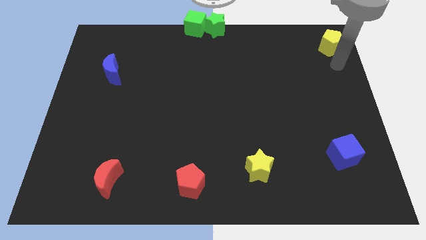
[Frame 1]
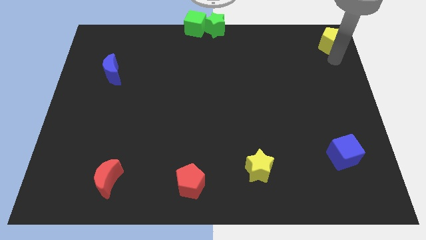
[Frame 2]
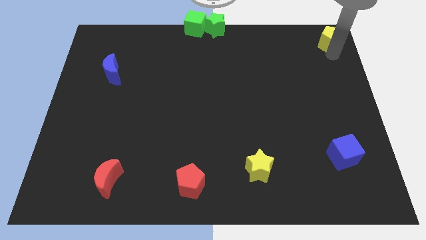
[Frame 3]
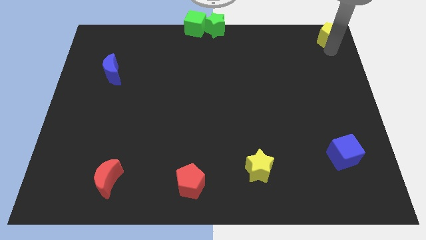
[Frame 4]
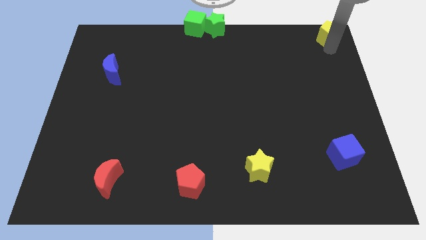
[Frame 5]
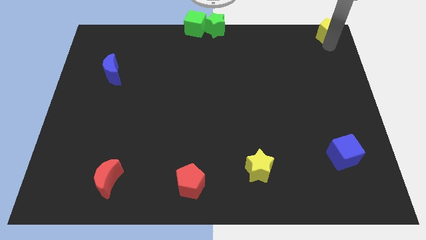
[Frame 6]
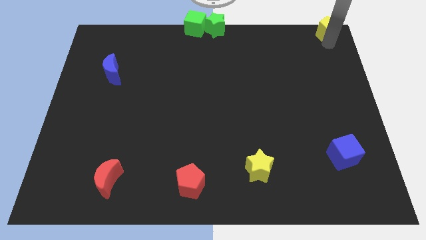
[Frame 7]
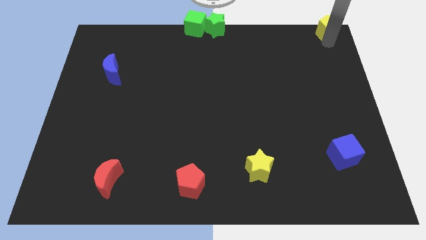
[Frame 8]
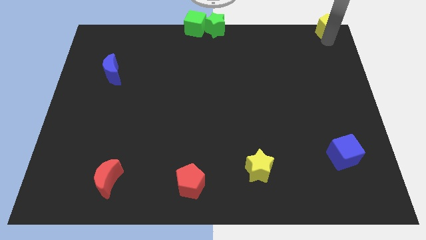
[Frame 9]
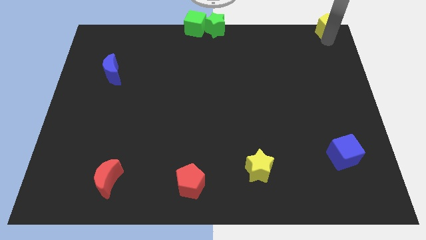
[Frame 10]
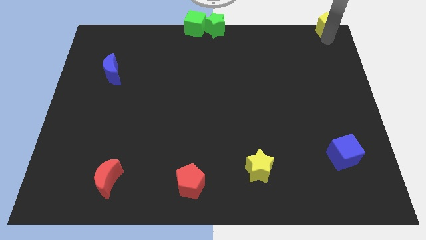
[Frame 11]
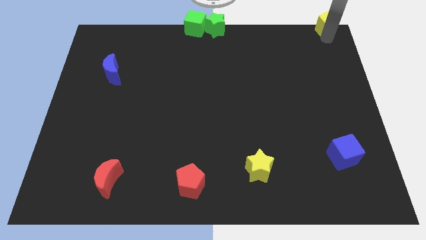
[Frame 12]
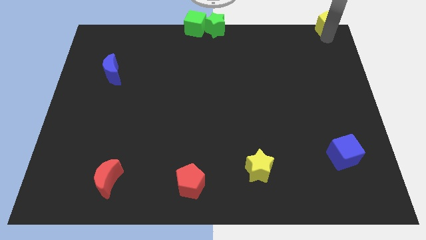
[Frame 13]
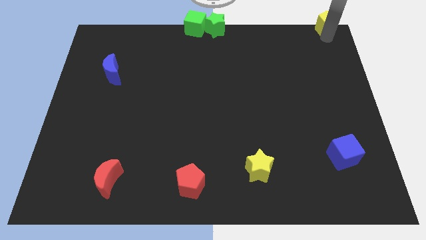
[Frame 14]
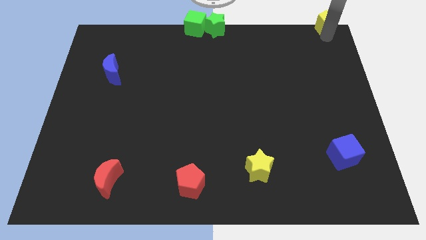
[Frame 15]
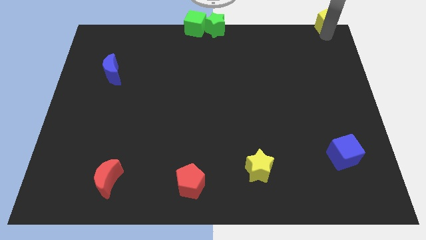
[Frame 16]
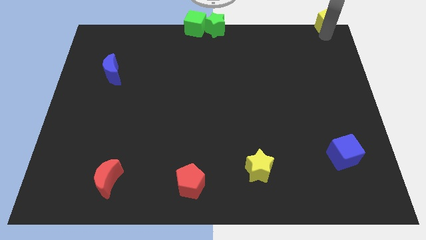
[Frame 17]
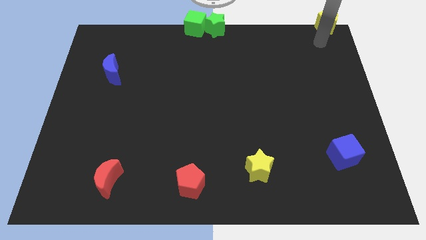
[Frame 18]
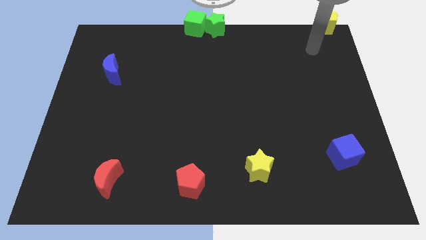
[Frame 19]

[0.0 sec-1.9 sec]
push the yellow pentagon at the top right of the board

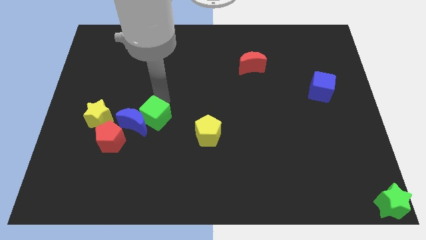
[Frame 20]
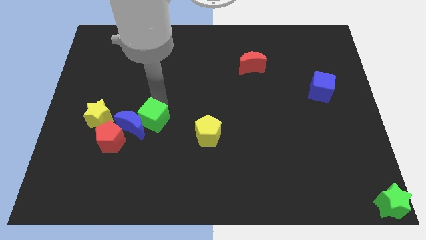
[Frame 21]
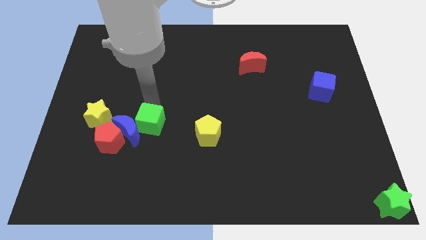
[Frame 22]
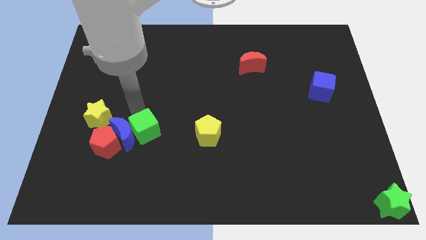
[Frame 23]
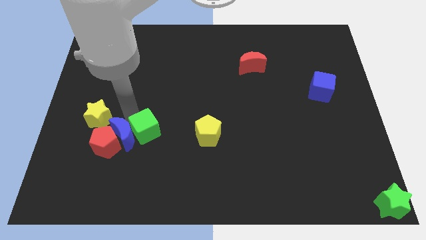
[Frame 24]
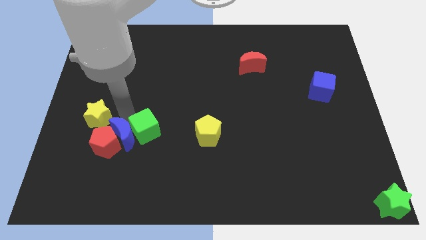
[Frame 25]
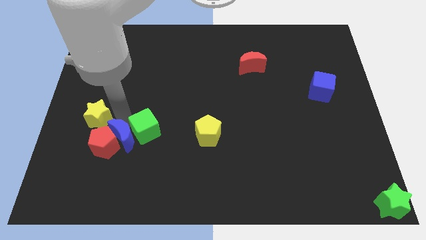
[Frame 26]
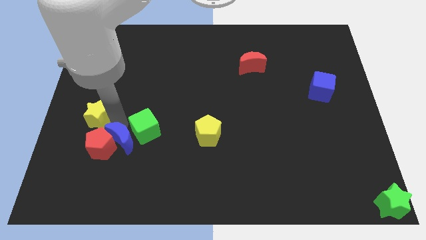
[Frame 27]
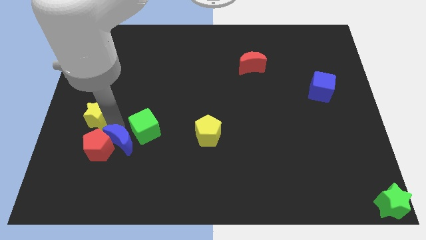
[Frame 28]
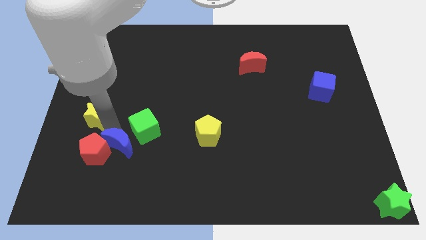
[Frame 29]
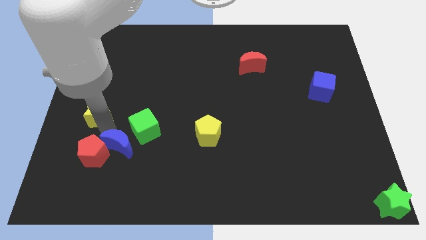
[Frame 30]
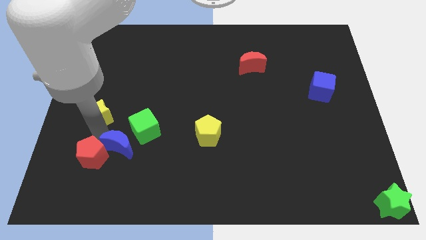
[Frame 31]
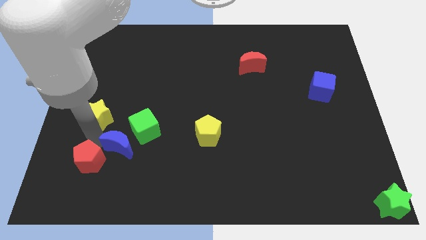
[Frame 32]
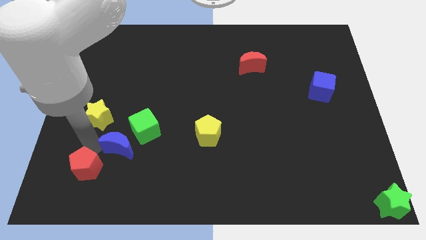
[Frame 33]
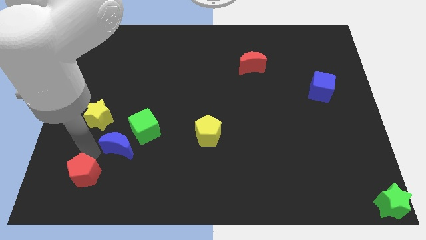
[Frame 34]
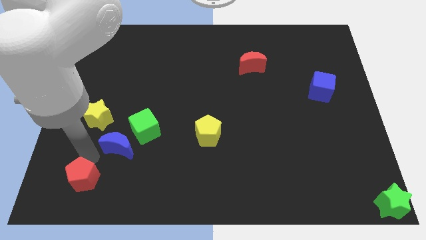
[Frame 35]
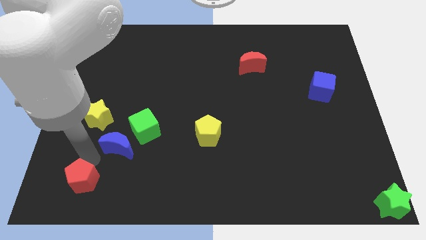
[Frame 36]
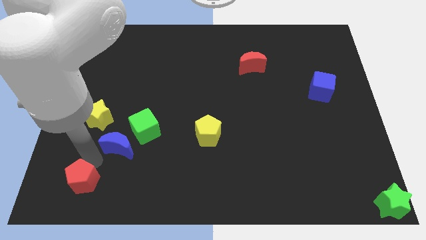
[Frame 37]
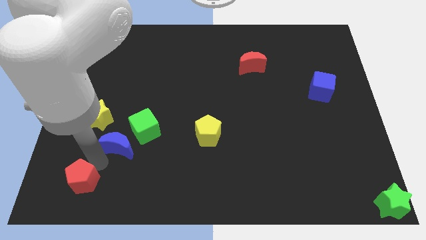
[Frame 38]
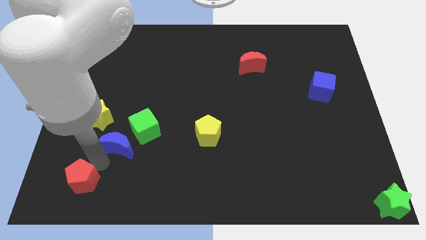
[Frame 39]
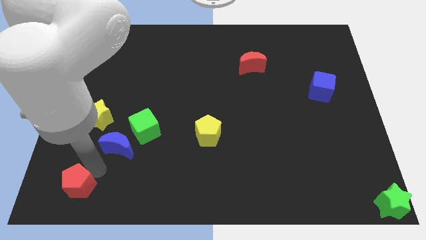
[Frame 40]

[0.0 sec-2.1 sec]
drag red pentagon towards bottom left of the board

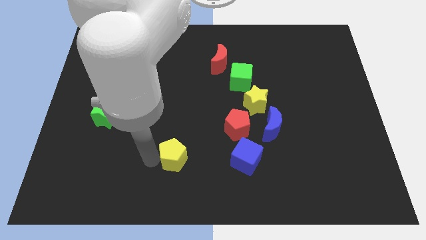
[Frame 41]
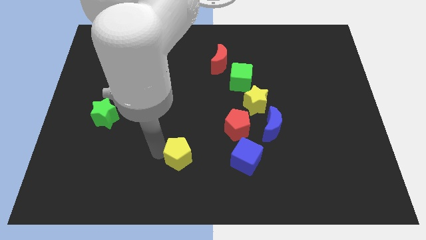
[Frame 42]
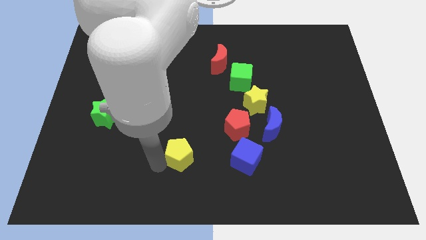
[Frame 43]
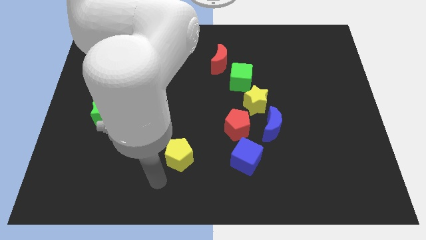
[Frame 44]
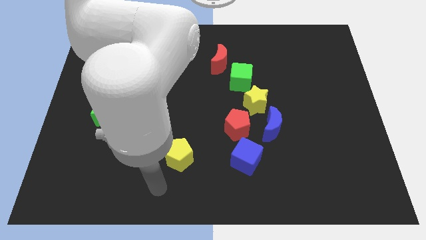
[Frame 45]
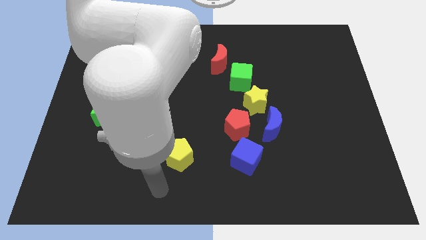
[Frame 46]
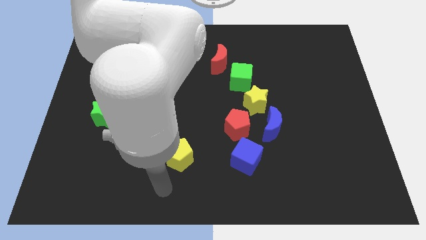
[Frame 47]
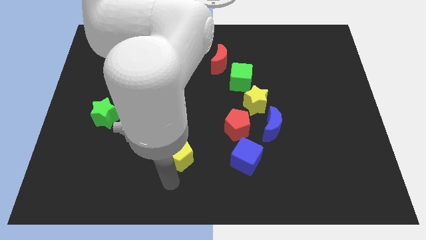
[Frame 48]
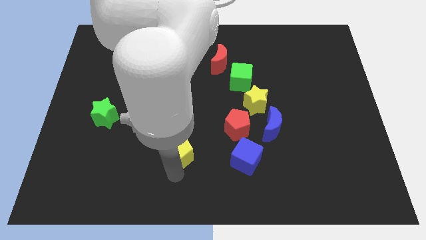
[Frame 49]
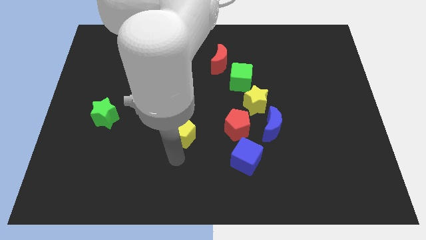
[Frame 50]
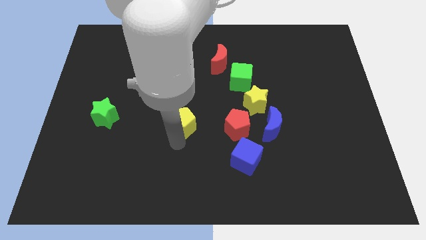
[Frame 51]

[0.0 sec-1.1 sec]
slide the yellow pentagon horizontally to the left side of the red pentagon

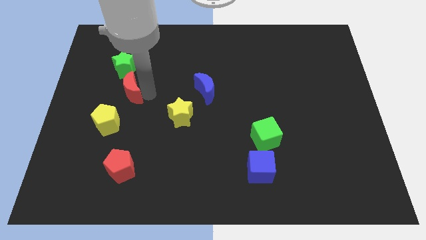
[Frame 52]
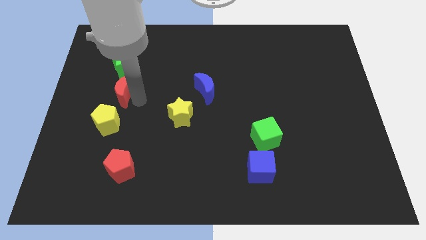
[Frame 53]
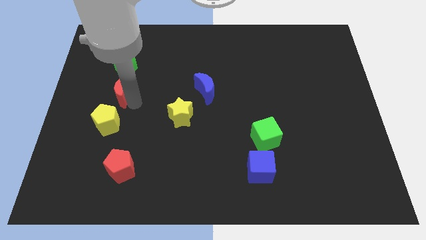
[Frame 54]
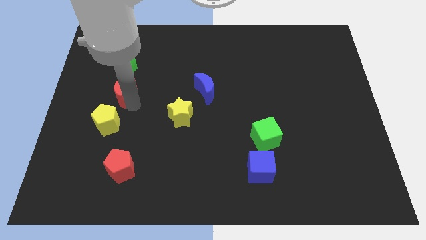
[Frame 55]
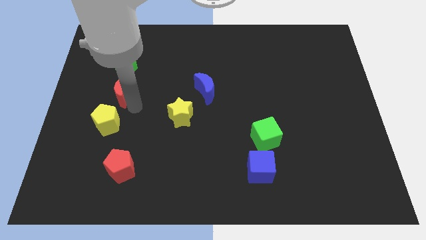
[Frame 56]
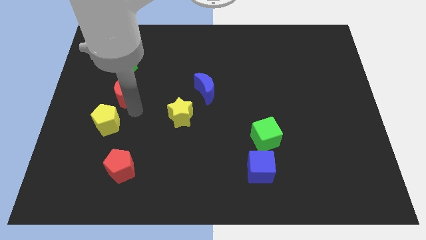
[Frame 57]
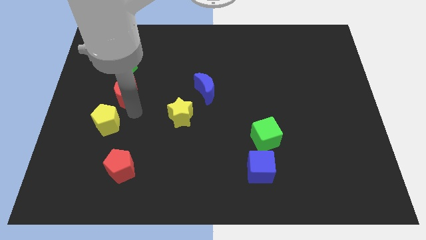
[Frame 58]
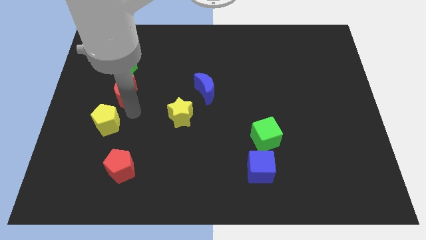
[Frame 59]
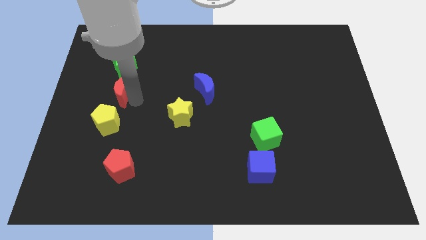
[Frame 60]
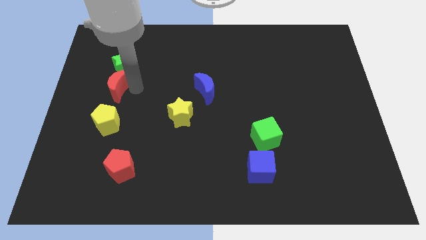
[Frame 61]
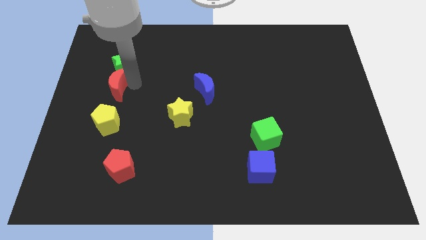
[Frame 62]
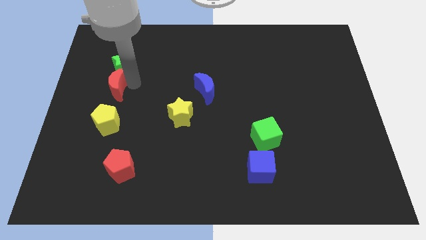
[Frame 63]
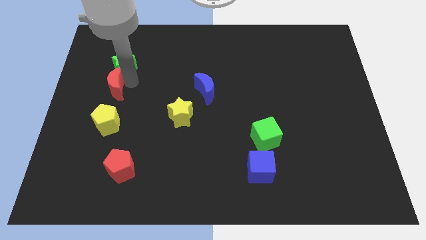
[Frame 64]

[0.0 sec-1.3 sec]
push the red crescent at the bottom of the green star

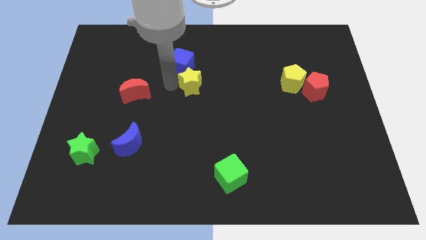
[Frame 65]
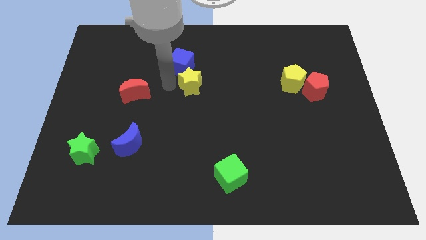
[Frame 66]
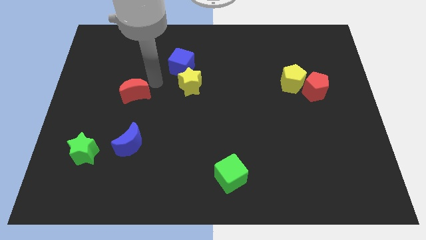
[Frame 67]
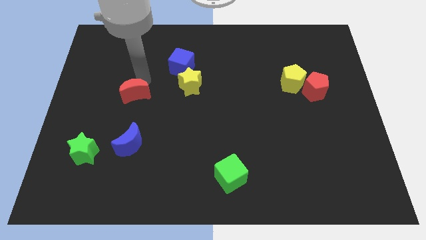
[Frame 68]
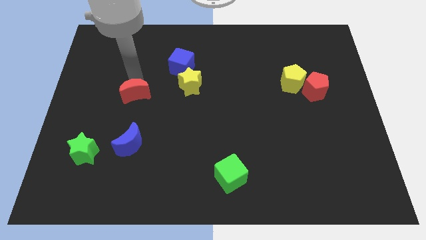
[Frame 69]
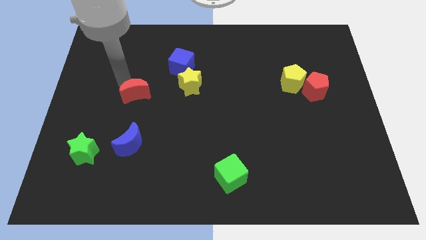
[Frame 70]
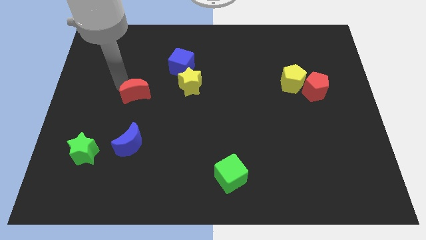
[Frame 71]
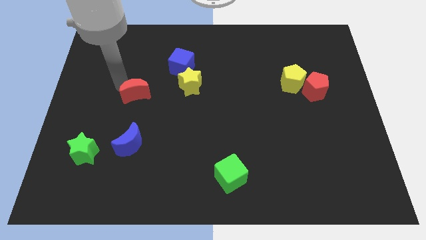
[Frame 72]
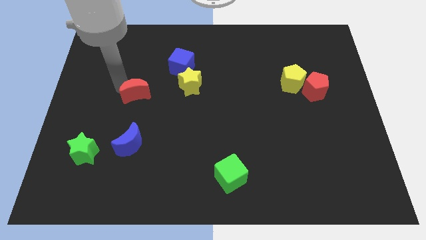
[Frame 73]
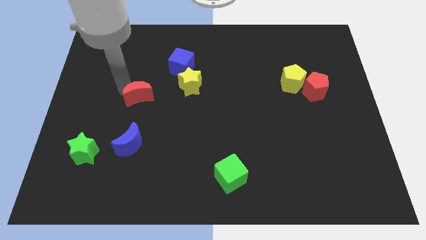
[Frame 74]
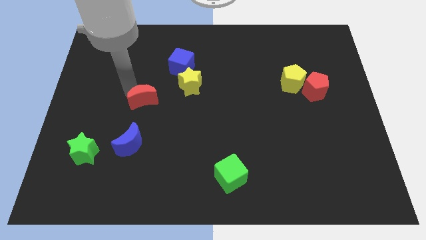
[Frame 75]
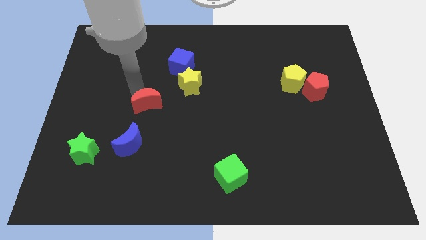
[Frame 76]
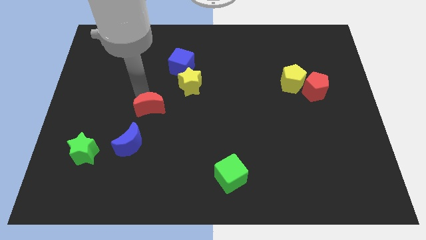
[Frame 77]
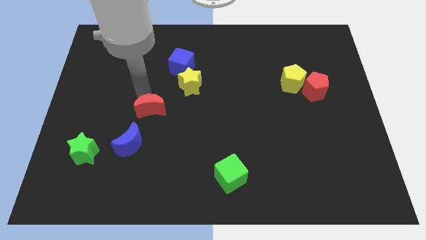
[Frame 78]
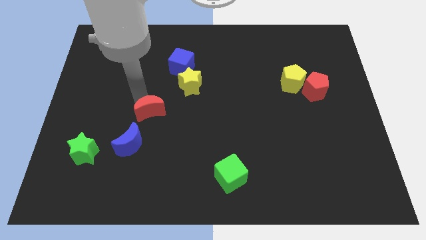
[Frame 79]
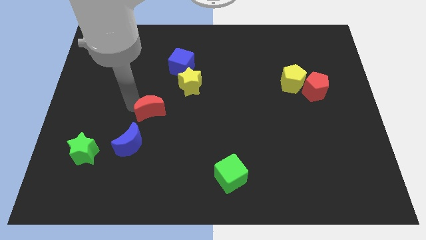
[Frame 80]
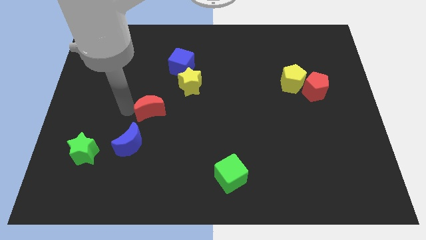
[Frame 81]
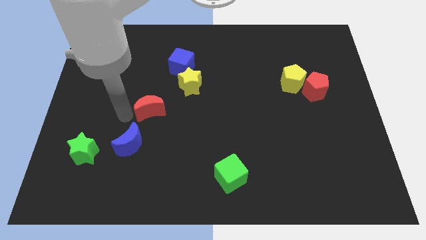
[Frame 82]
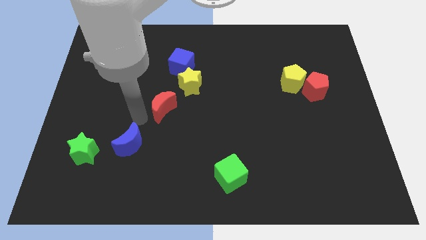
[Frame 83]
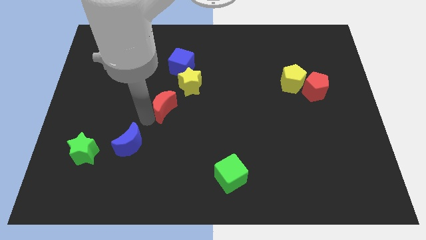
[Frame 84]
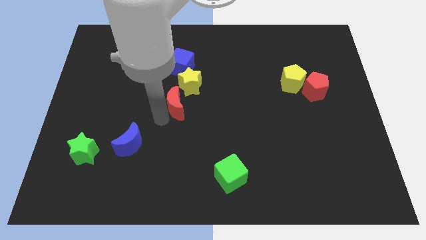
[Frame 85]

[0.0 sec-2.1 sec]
place the red crescent at the bottom of the blue cube

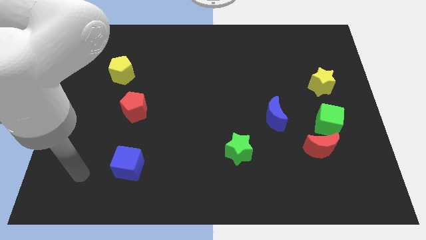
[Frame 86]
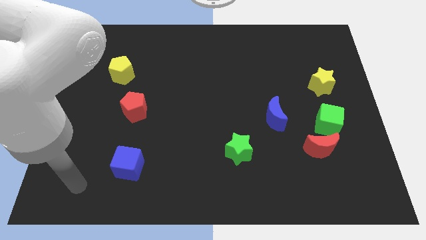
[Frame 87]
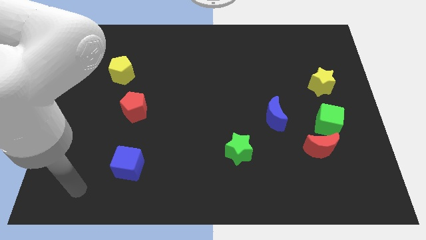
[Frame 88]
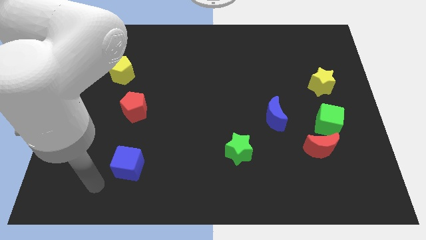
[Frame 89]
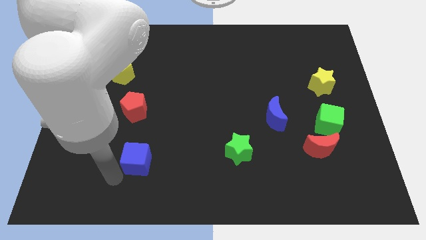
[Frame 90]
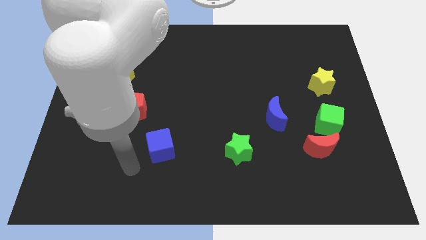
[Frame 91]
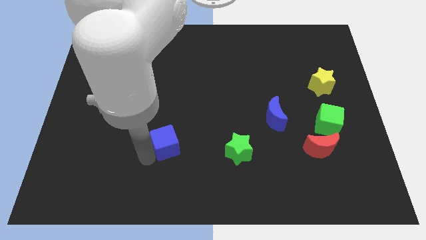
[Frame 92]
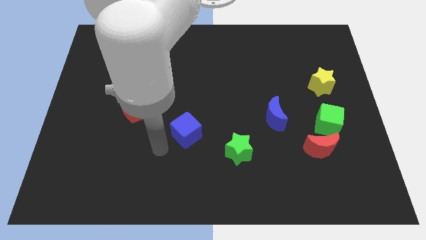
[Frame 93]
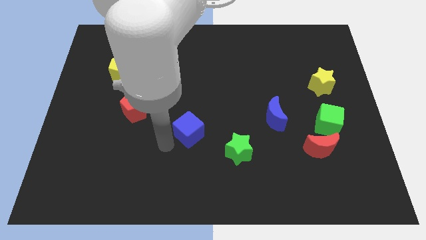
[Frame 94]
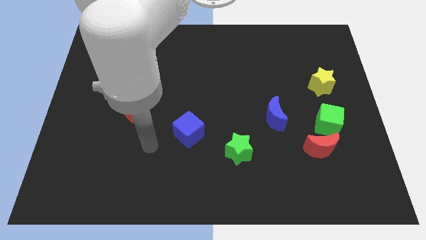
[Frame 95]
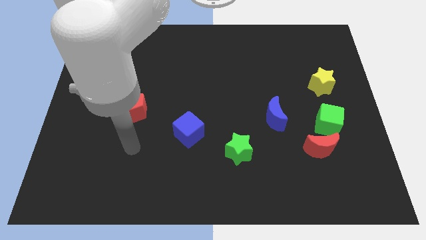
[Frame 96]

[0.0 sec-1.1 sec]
push the blue cube diagonally in between the red crescent and the green star
